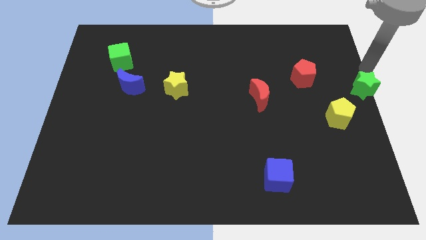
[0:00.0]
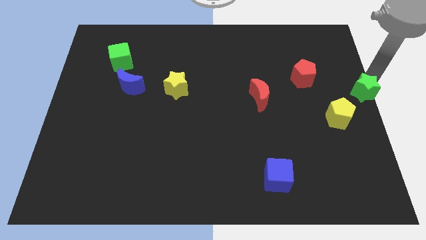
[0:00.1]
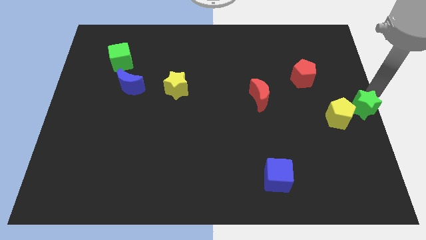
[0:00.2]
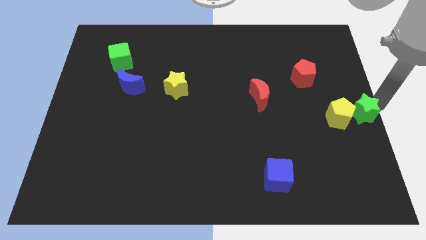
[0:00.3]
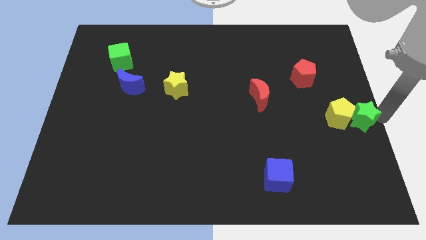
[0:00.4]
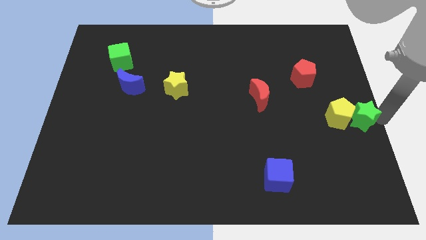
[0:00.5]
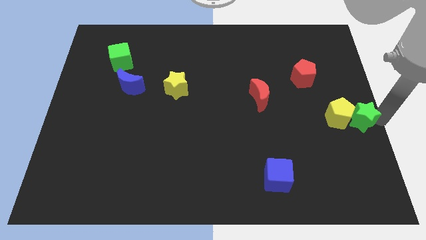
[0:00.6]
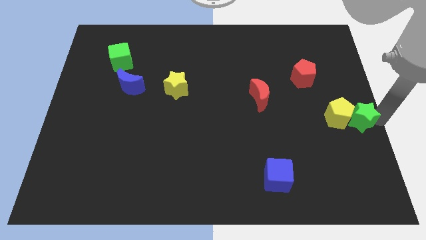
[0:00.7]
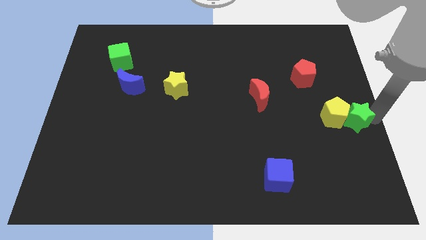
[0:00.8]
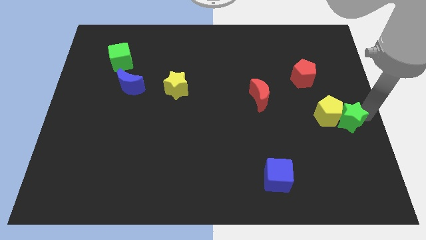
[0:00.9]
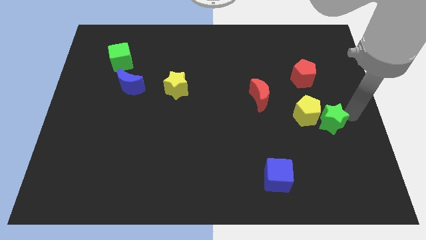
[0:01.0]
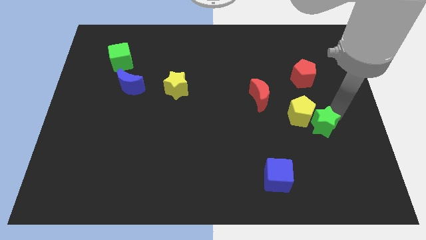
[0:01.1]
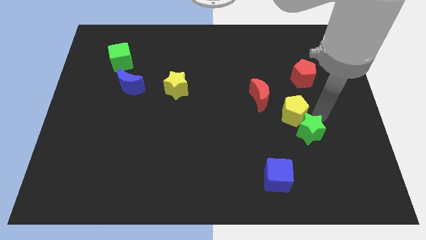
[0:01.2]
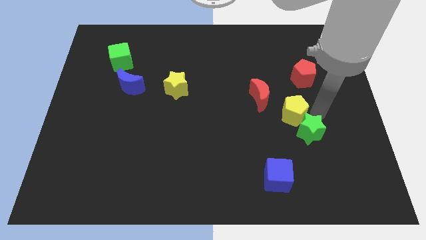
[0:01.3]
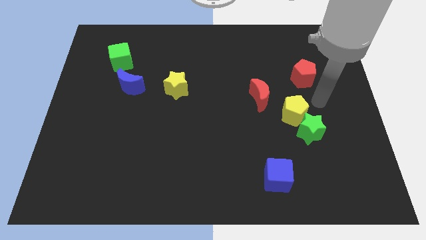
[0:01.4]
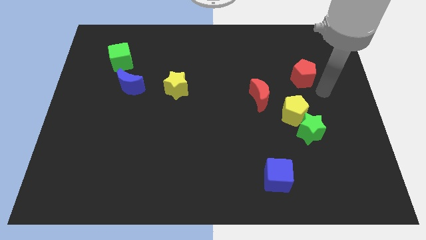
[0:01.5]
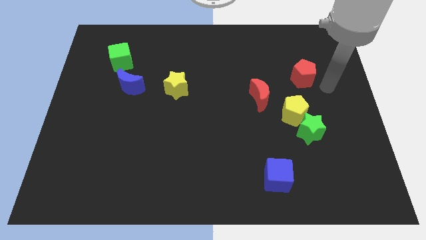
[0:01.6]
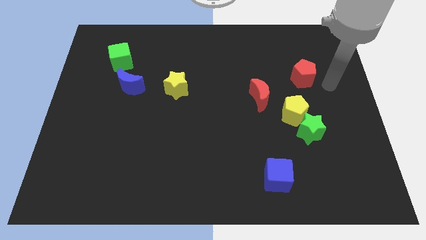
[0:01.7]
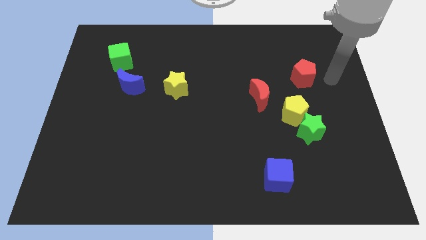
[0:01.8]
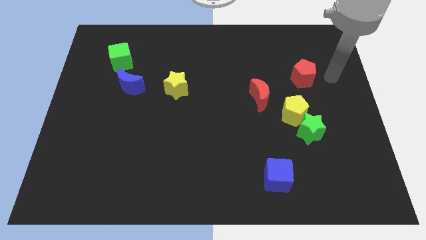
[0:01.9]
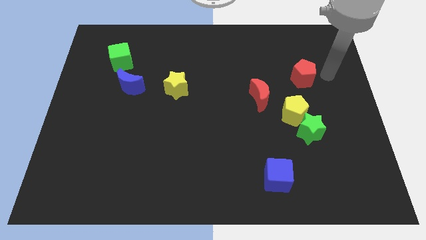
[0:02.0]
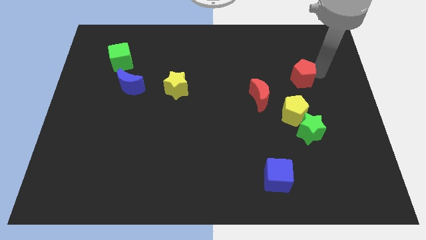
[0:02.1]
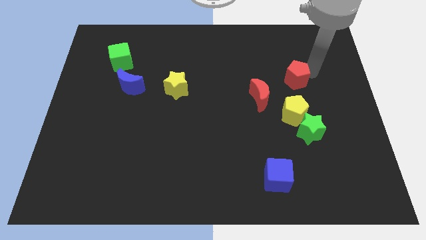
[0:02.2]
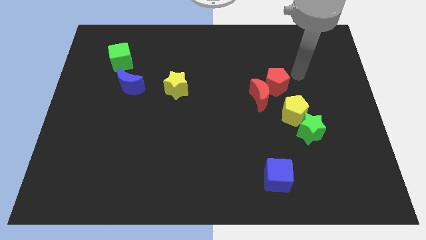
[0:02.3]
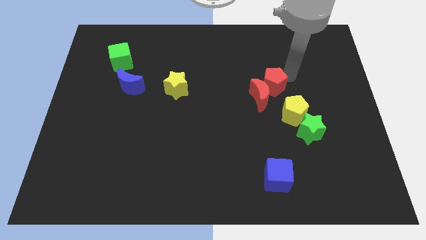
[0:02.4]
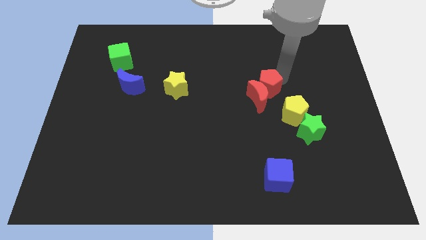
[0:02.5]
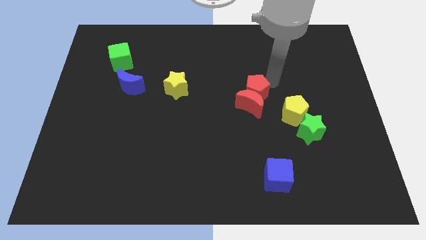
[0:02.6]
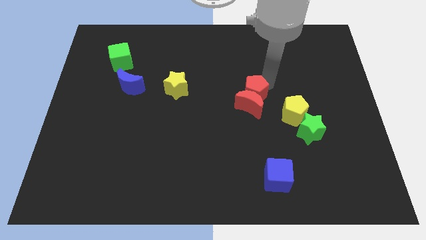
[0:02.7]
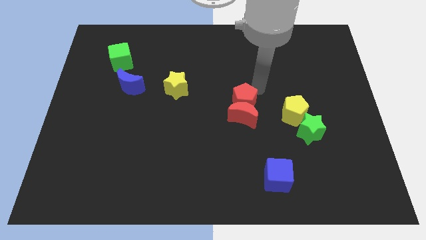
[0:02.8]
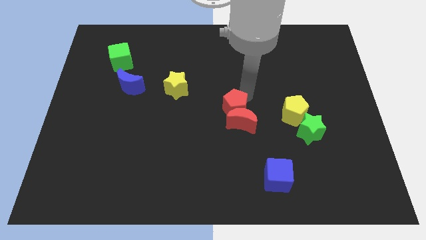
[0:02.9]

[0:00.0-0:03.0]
push the yellow pentagon green star and red blocks towards the left side of the board

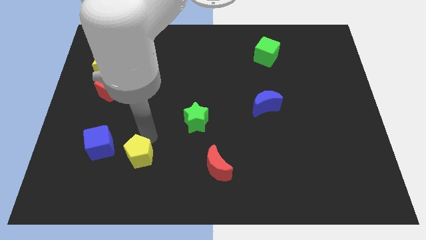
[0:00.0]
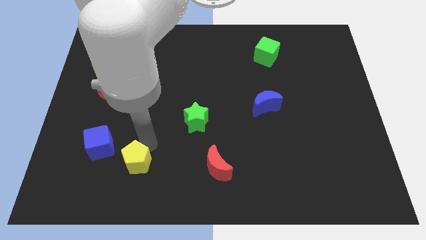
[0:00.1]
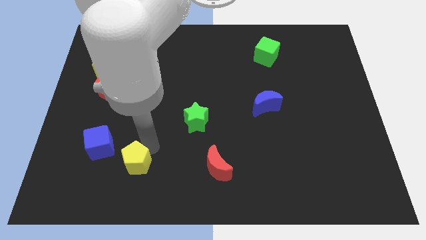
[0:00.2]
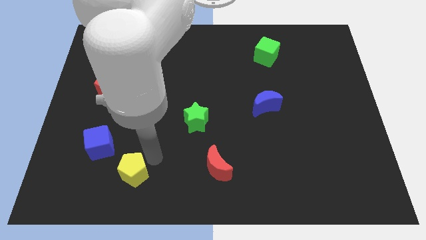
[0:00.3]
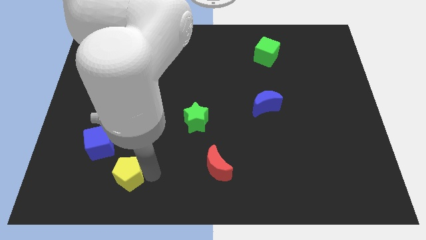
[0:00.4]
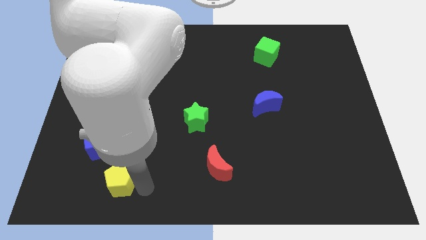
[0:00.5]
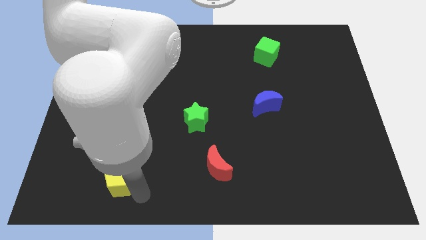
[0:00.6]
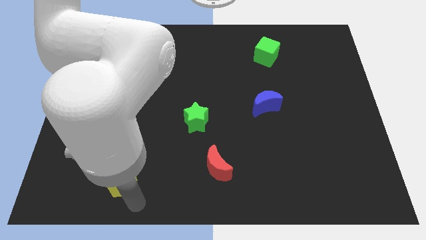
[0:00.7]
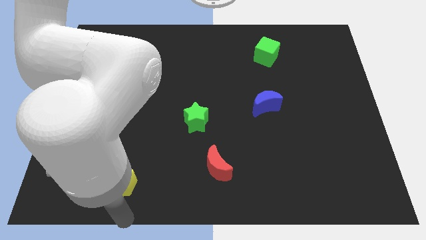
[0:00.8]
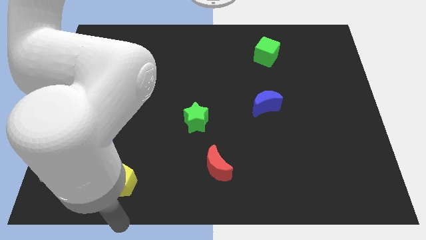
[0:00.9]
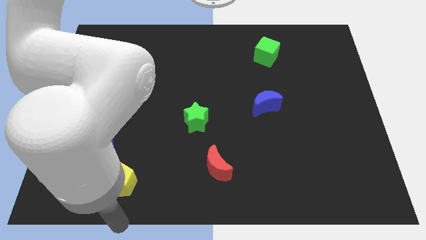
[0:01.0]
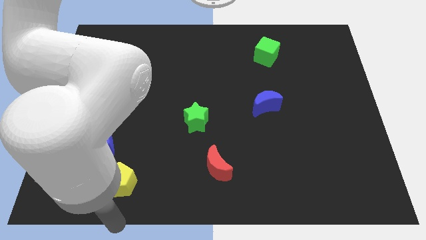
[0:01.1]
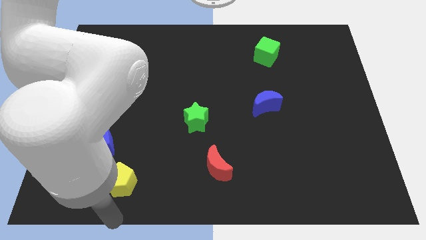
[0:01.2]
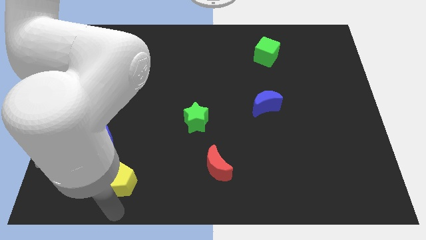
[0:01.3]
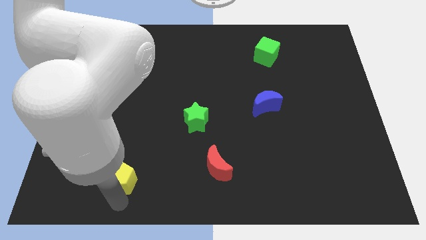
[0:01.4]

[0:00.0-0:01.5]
place yellow pentagon below the blue cube

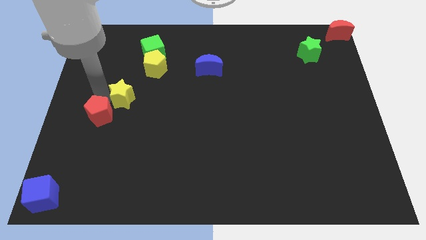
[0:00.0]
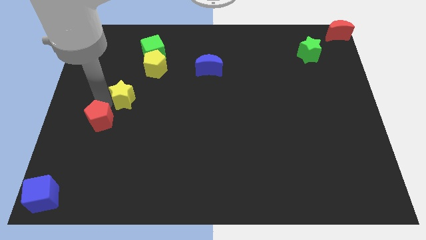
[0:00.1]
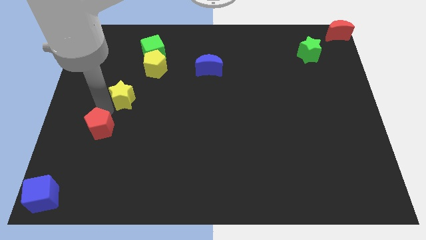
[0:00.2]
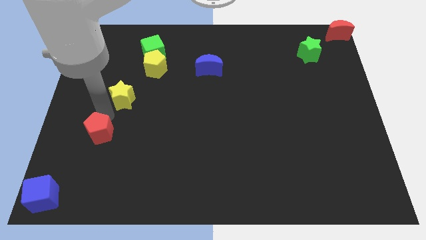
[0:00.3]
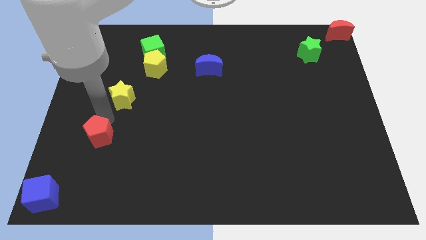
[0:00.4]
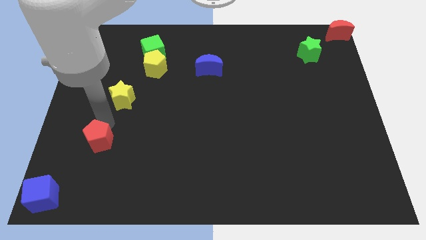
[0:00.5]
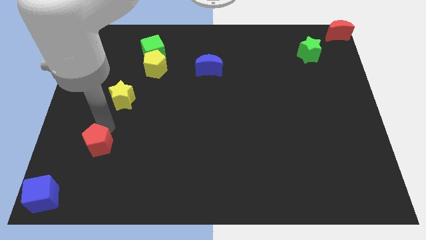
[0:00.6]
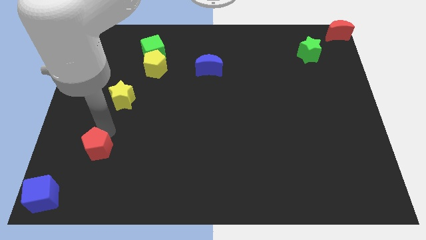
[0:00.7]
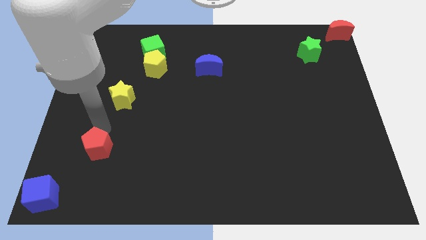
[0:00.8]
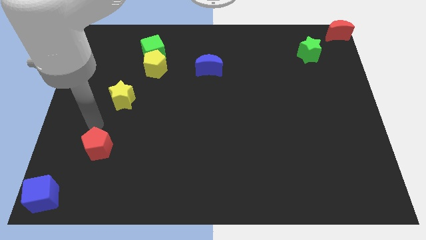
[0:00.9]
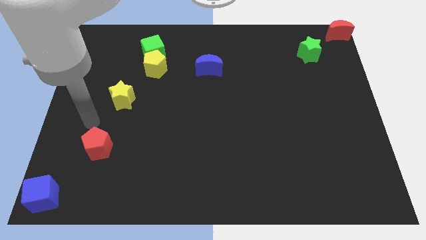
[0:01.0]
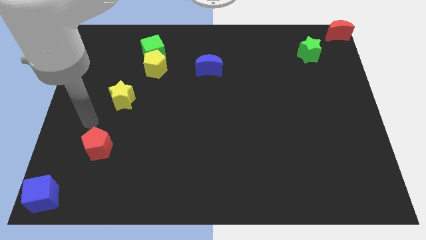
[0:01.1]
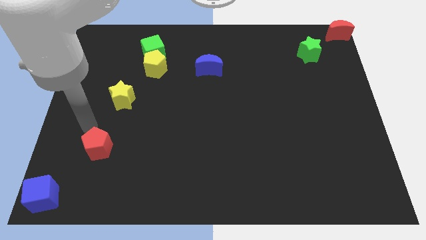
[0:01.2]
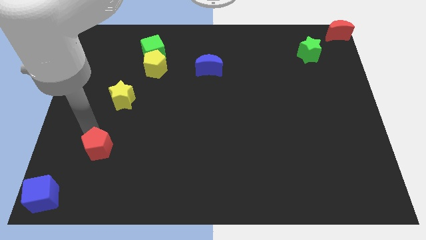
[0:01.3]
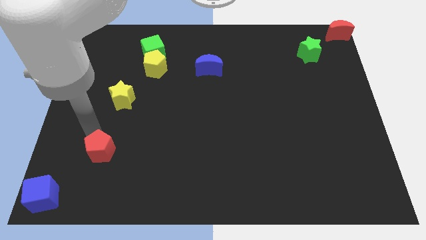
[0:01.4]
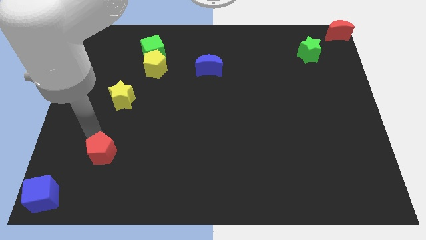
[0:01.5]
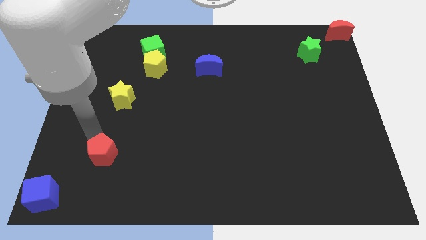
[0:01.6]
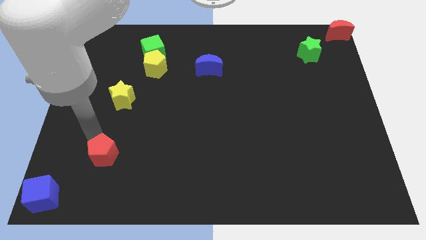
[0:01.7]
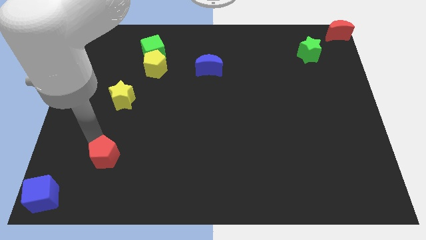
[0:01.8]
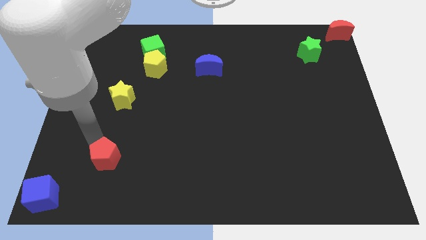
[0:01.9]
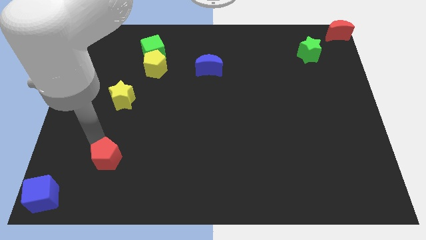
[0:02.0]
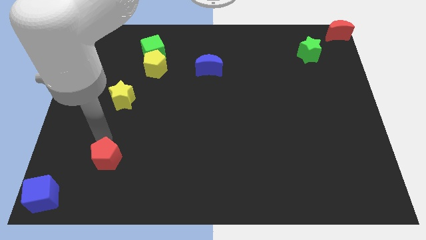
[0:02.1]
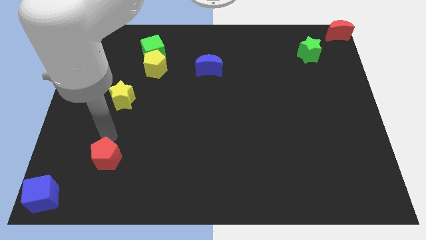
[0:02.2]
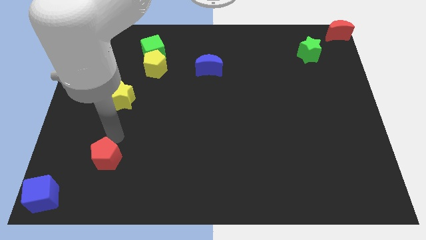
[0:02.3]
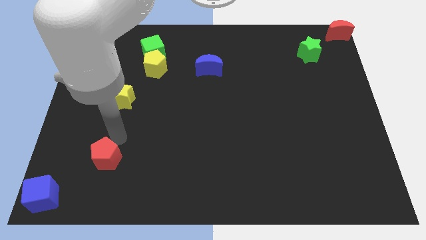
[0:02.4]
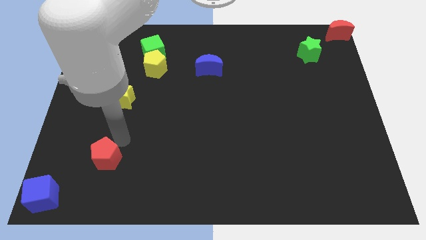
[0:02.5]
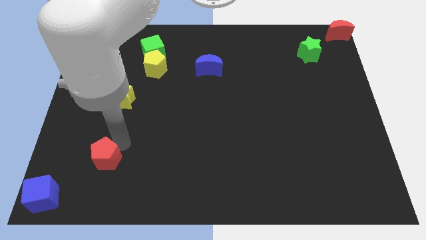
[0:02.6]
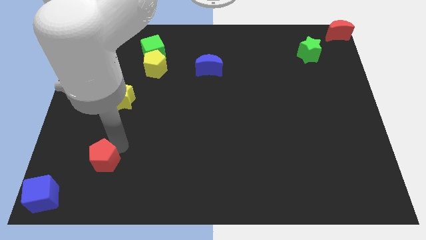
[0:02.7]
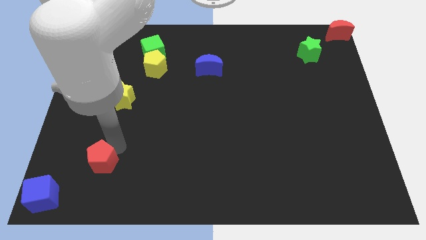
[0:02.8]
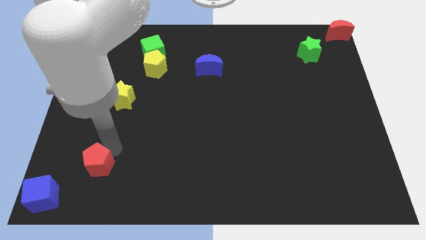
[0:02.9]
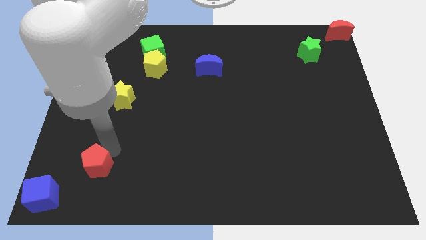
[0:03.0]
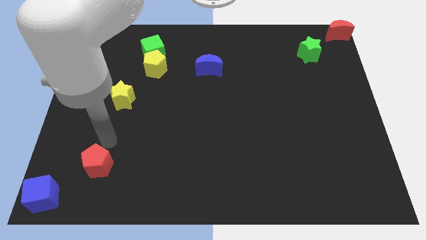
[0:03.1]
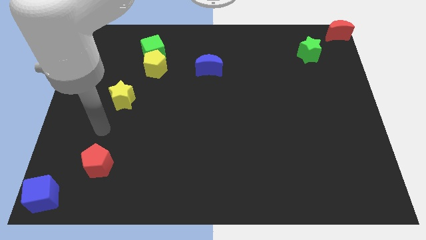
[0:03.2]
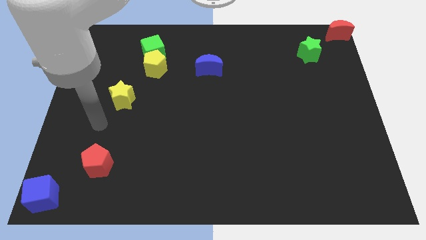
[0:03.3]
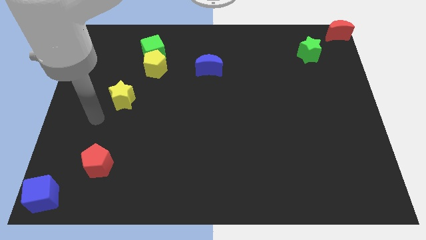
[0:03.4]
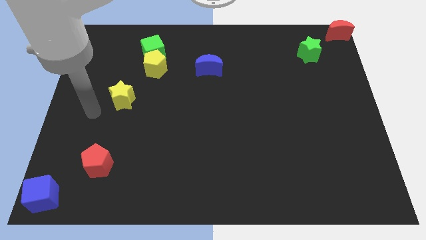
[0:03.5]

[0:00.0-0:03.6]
place the red pentagon diagonal right of blue cube

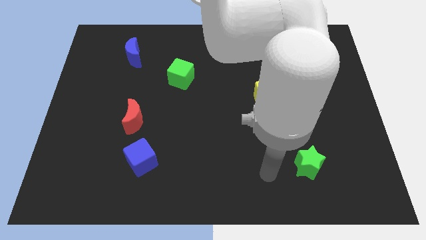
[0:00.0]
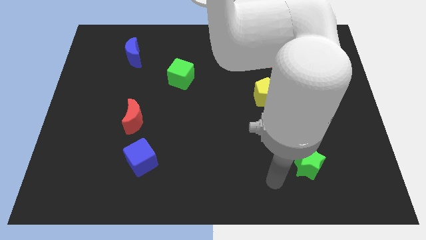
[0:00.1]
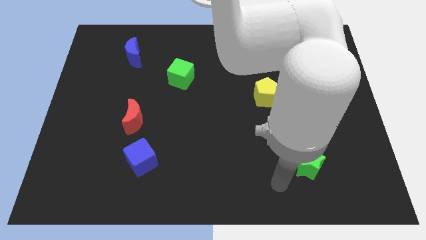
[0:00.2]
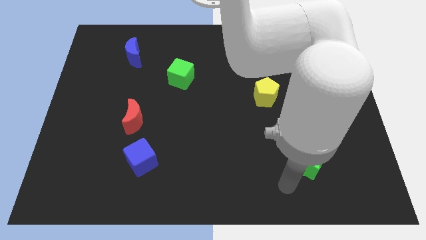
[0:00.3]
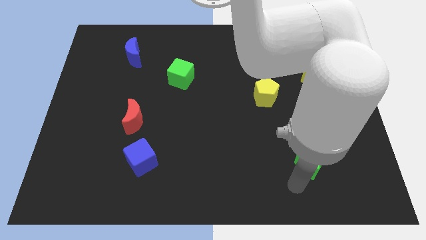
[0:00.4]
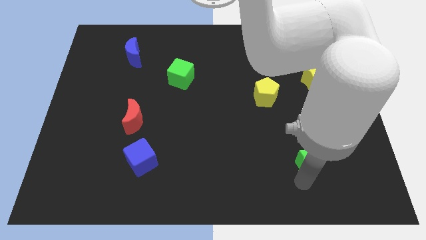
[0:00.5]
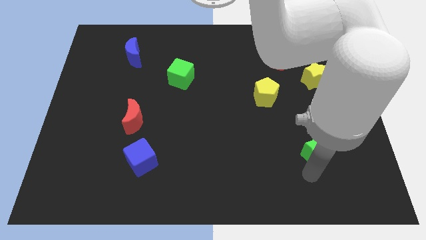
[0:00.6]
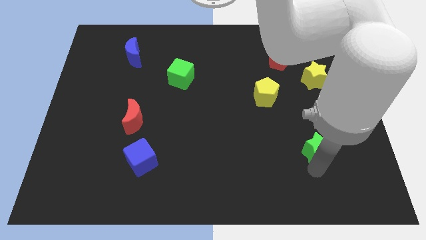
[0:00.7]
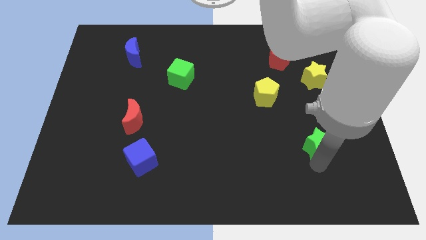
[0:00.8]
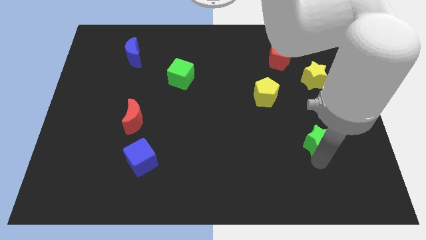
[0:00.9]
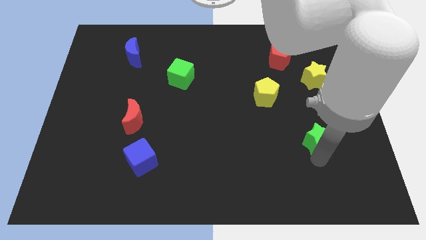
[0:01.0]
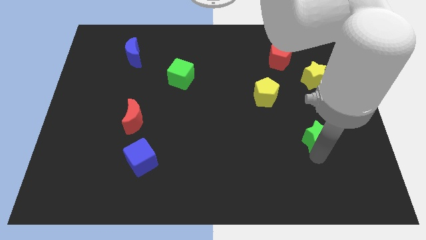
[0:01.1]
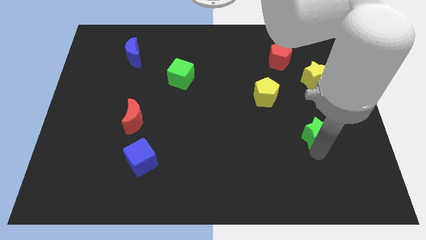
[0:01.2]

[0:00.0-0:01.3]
move the green star to the top of the board
